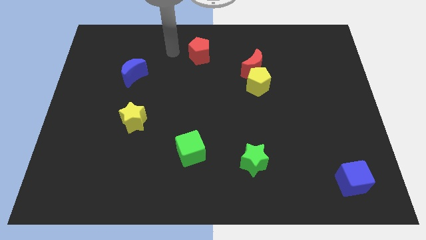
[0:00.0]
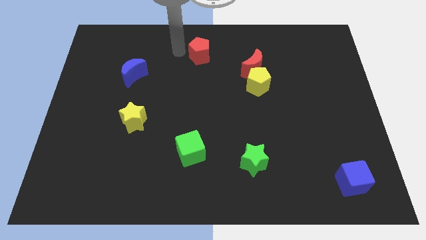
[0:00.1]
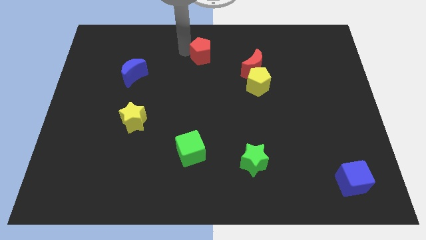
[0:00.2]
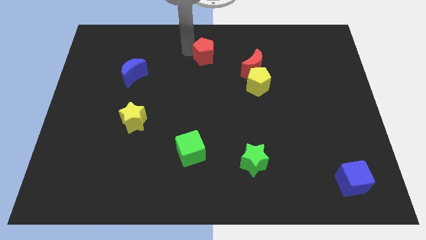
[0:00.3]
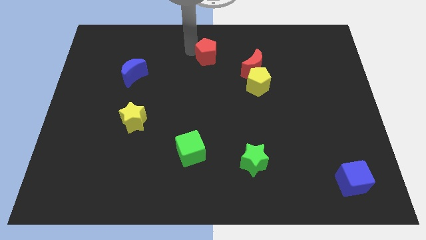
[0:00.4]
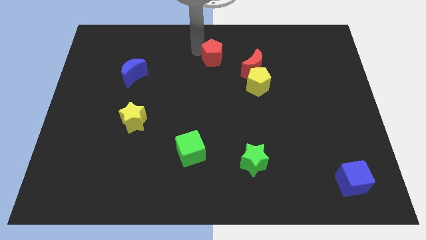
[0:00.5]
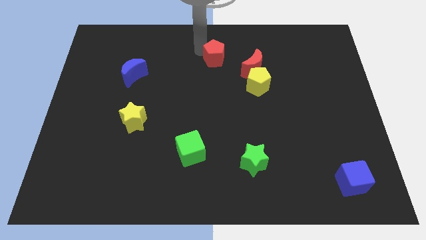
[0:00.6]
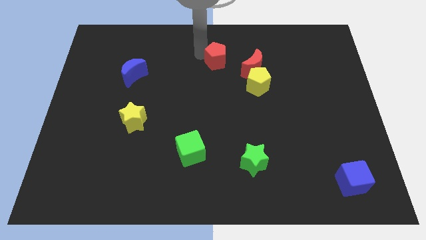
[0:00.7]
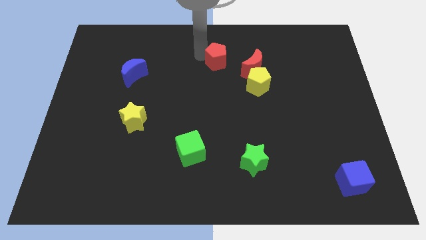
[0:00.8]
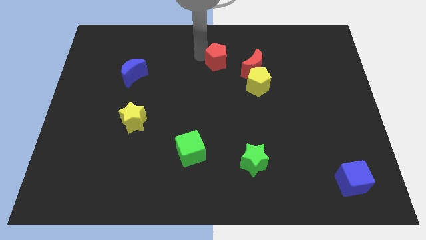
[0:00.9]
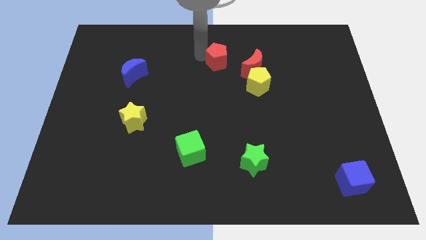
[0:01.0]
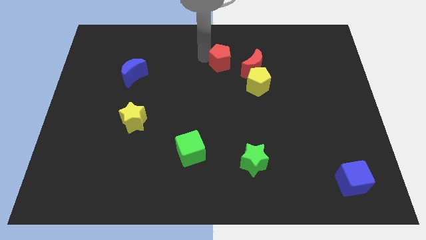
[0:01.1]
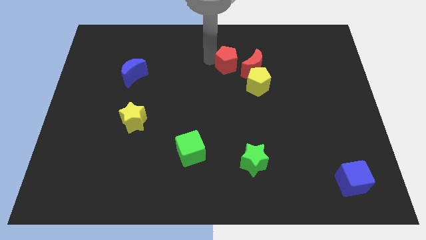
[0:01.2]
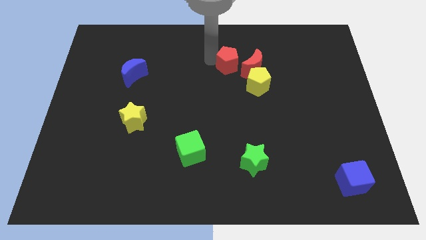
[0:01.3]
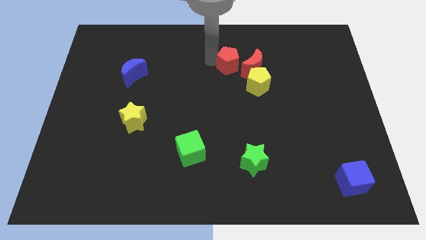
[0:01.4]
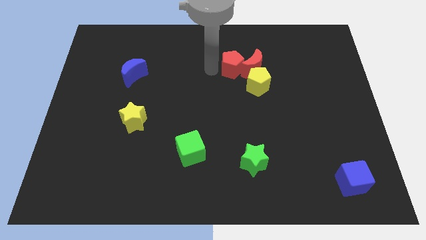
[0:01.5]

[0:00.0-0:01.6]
push red pentagon towards red moon

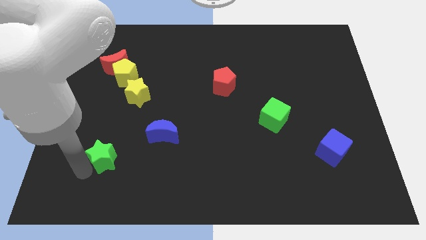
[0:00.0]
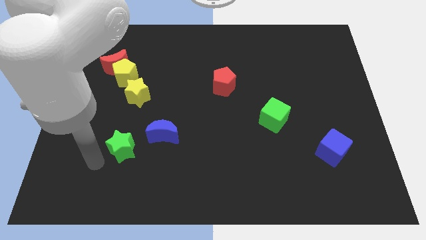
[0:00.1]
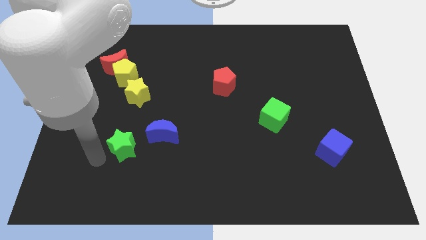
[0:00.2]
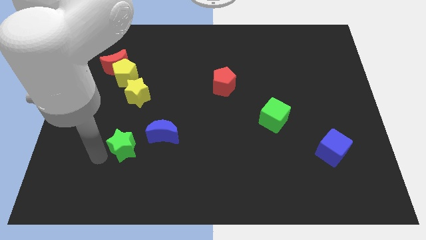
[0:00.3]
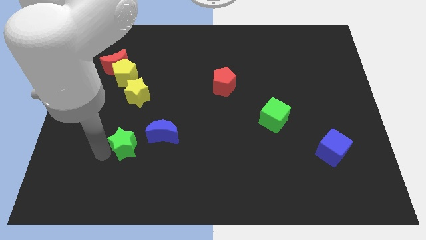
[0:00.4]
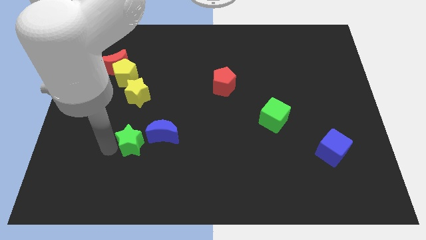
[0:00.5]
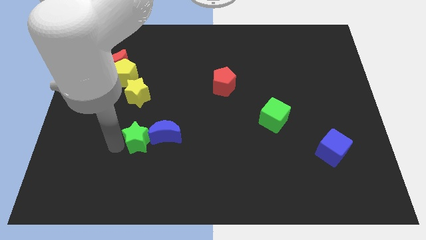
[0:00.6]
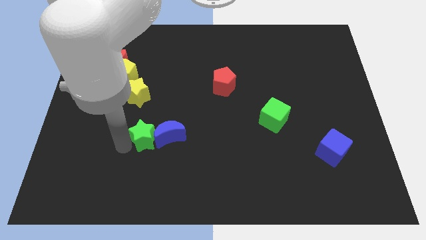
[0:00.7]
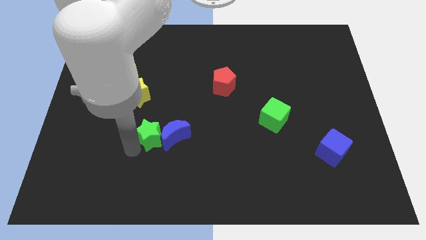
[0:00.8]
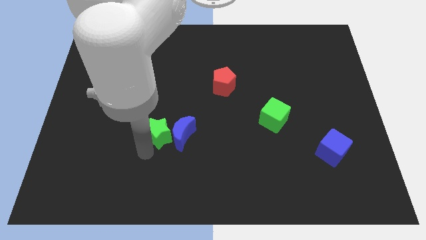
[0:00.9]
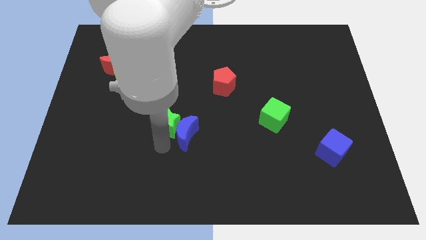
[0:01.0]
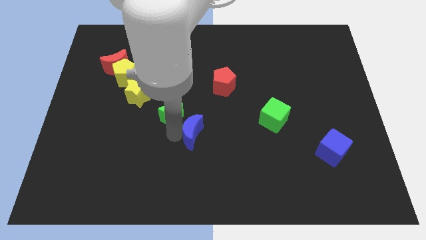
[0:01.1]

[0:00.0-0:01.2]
push the green star to the left of the blue crescent

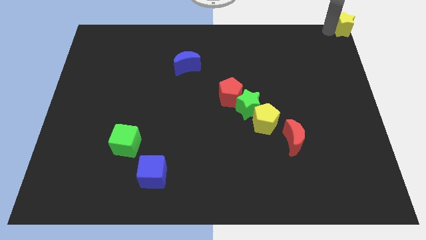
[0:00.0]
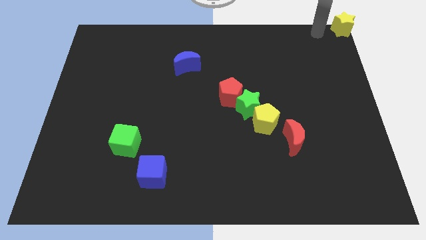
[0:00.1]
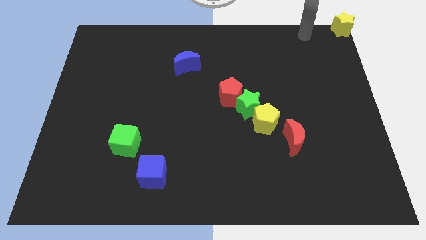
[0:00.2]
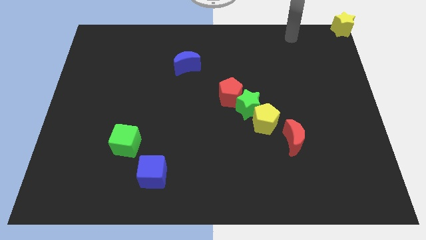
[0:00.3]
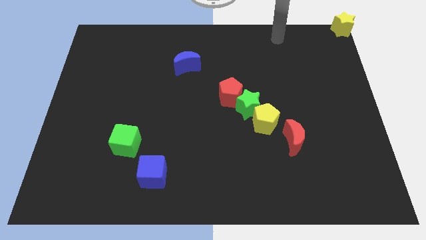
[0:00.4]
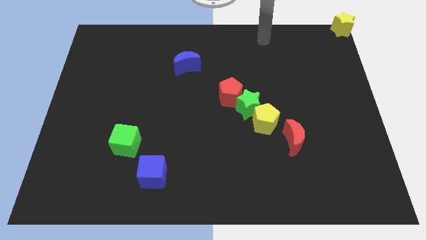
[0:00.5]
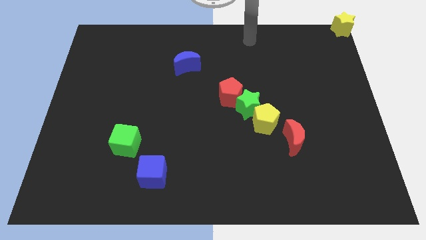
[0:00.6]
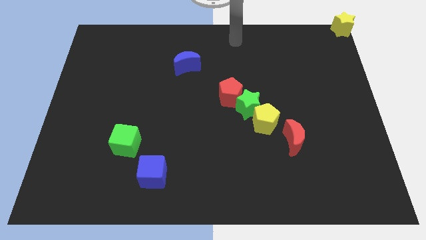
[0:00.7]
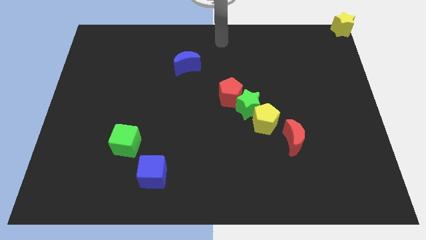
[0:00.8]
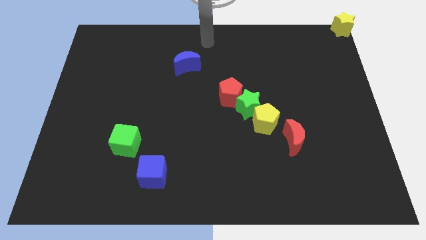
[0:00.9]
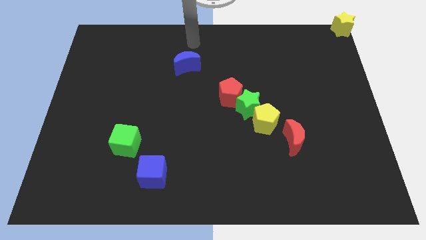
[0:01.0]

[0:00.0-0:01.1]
point your arm at the top of the blue crescent

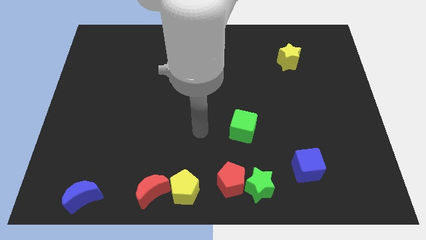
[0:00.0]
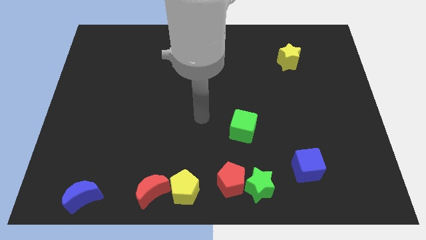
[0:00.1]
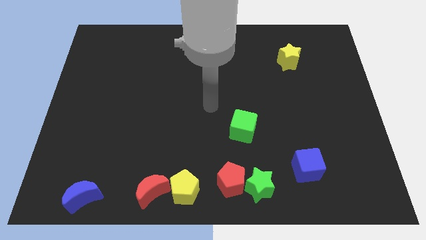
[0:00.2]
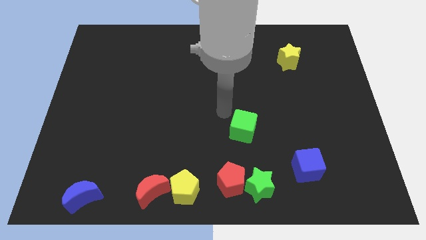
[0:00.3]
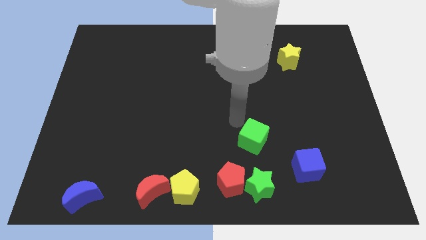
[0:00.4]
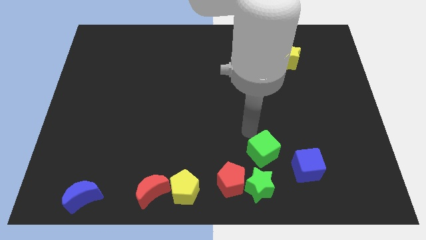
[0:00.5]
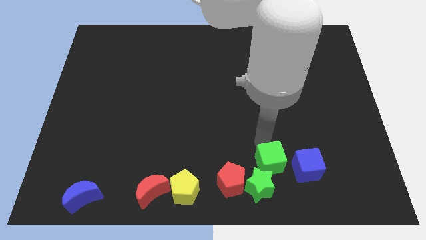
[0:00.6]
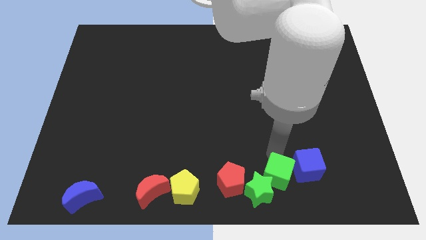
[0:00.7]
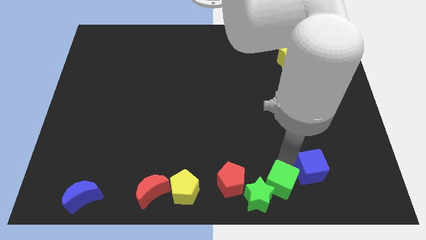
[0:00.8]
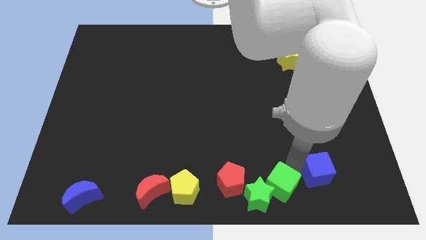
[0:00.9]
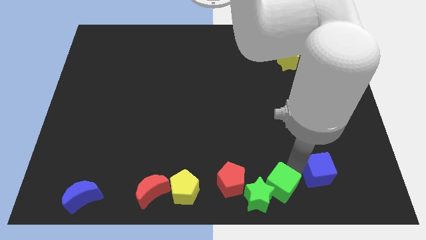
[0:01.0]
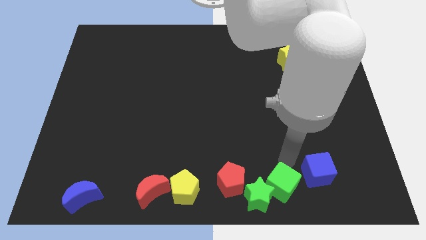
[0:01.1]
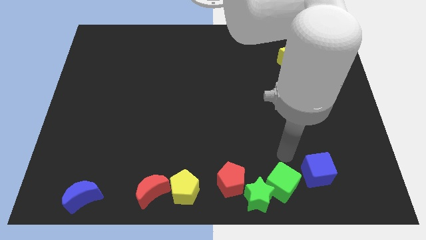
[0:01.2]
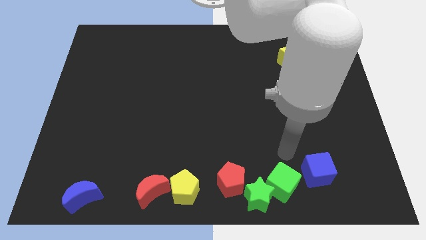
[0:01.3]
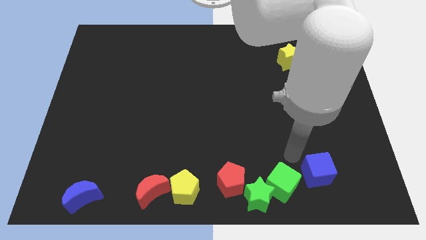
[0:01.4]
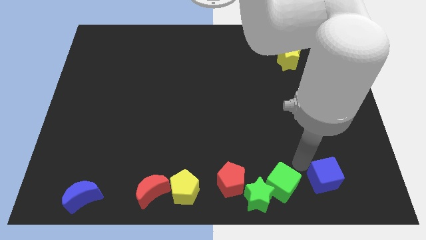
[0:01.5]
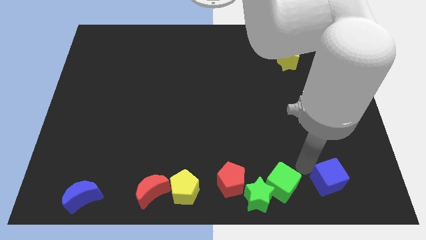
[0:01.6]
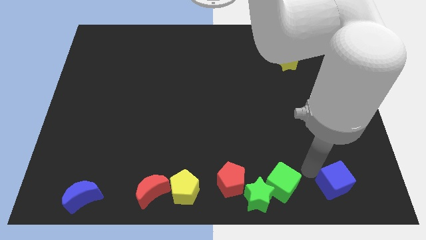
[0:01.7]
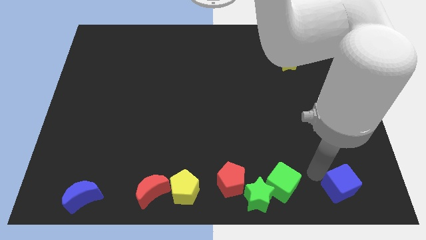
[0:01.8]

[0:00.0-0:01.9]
place the green cube between the blue square and the green star

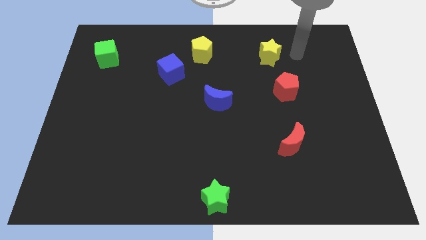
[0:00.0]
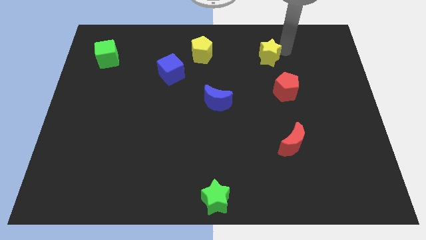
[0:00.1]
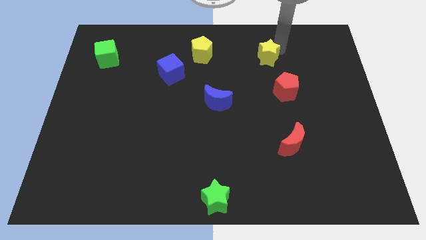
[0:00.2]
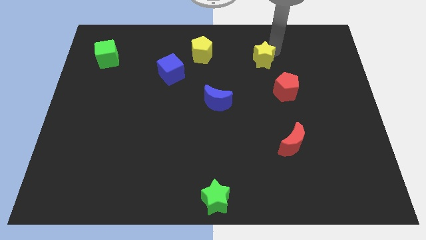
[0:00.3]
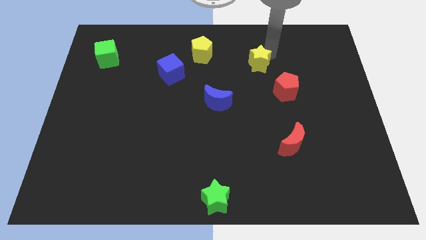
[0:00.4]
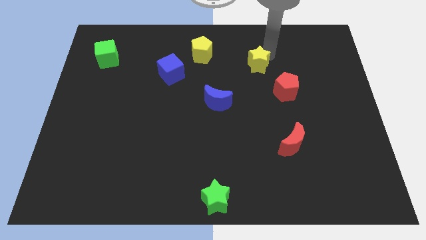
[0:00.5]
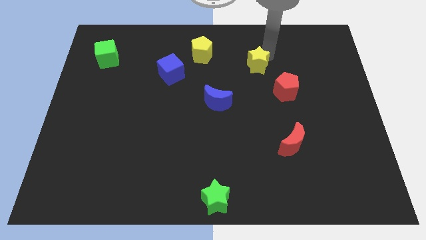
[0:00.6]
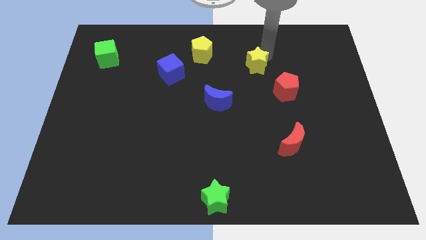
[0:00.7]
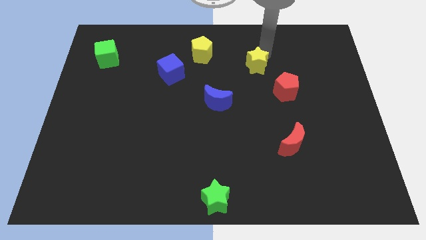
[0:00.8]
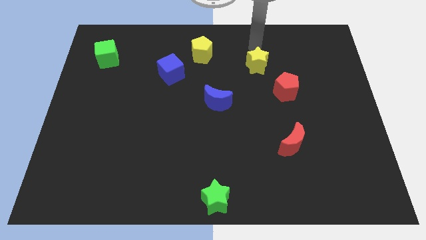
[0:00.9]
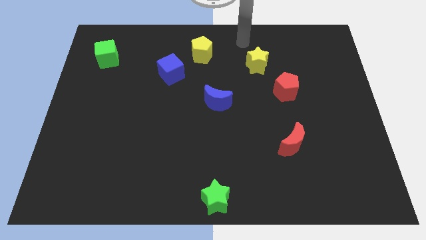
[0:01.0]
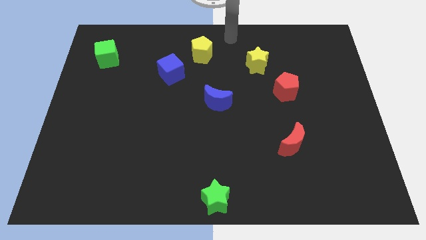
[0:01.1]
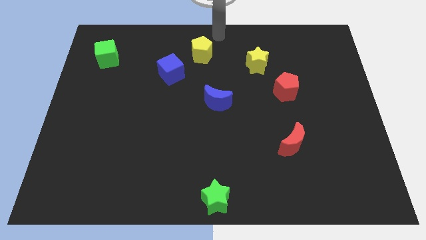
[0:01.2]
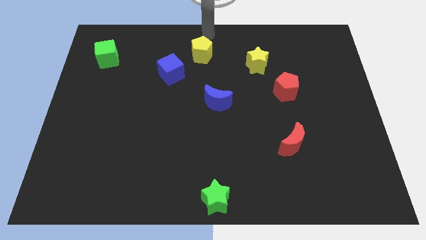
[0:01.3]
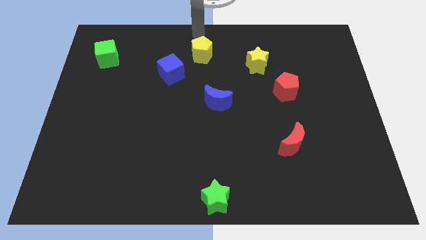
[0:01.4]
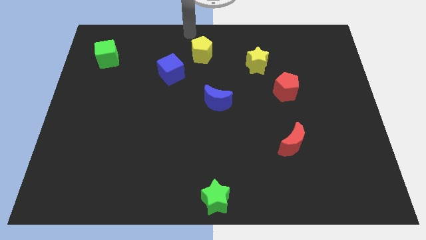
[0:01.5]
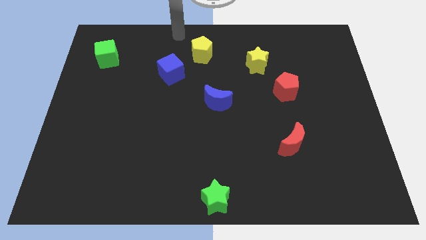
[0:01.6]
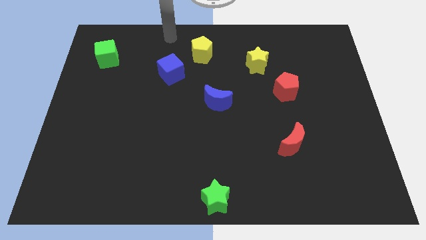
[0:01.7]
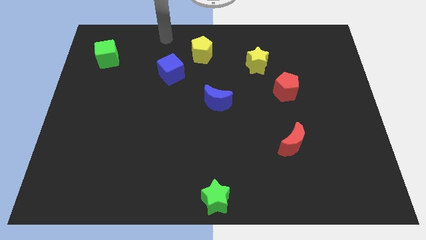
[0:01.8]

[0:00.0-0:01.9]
slightly move the yellow star close to the red pentagon

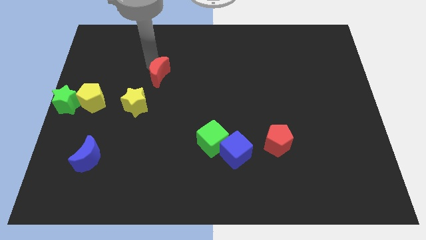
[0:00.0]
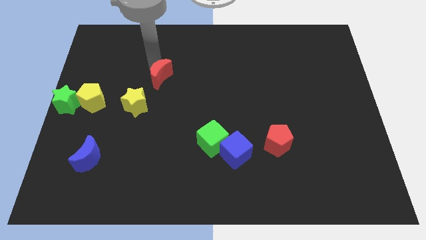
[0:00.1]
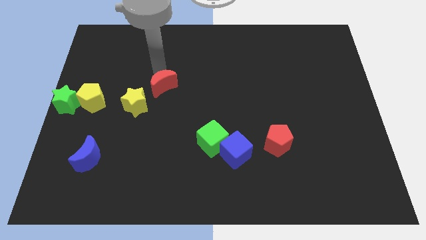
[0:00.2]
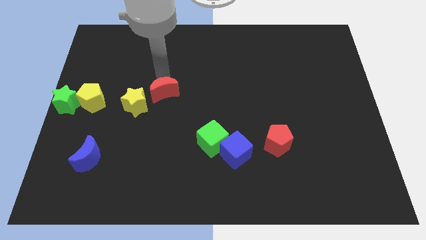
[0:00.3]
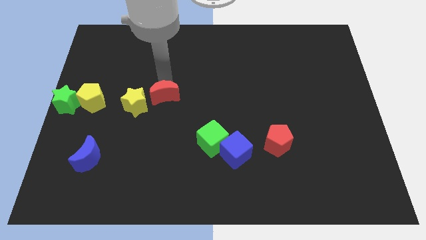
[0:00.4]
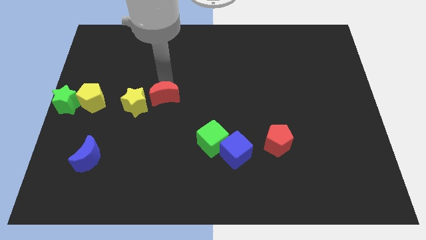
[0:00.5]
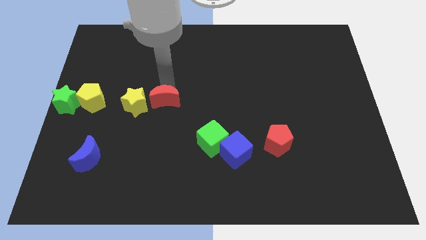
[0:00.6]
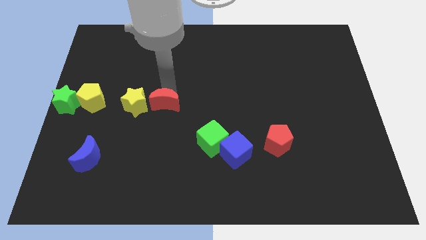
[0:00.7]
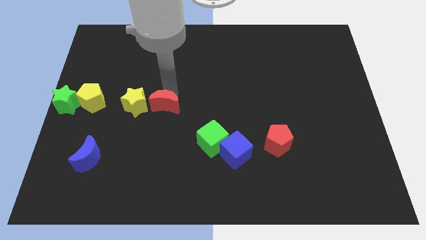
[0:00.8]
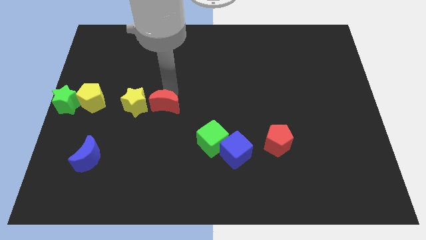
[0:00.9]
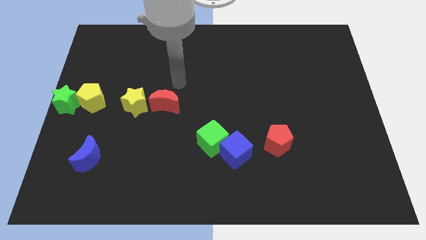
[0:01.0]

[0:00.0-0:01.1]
move the red moon on the right side of the yellow star
